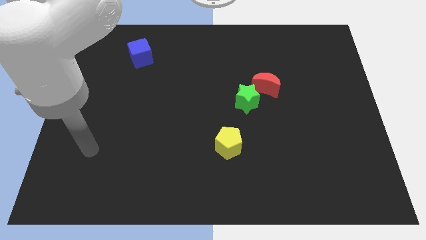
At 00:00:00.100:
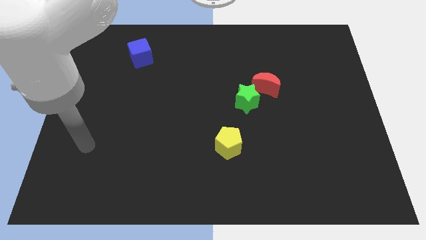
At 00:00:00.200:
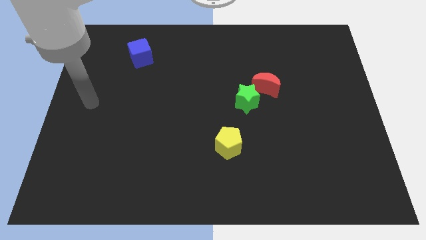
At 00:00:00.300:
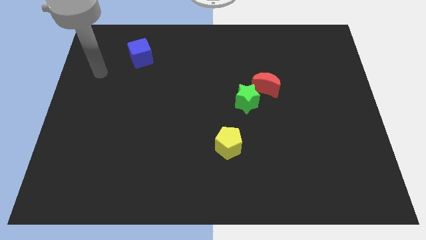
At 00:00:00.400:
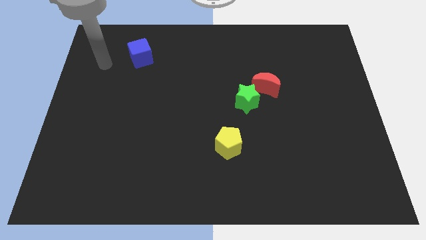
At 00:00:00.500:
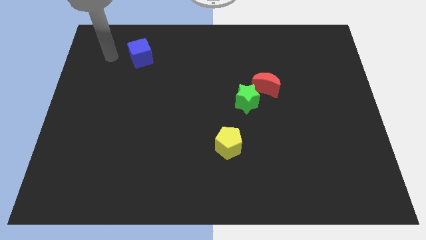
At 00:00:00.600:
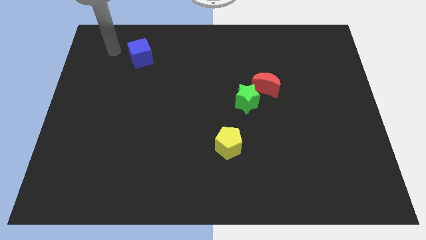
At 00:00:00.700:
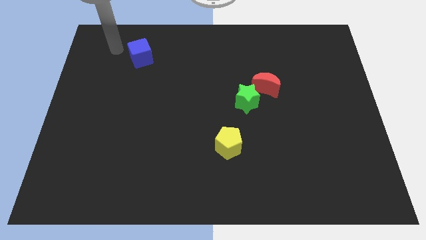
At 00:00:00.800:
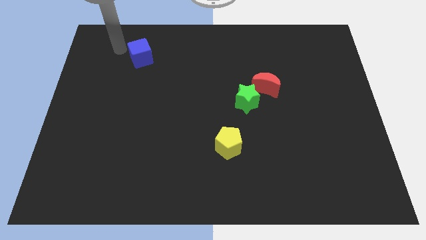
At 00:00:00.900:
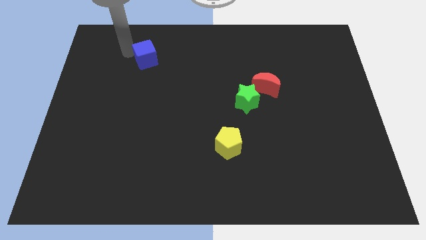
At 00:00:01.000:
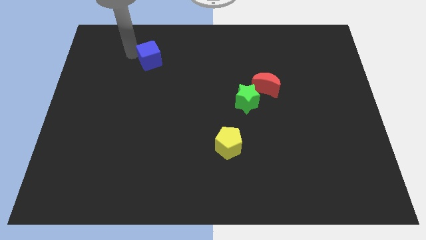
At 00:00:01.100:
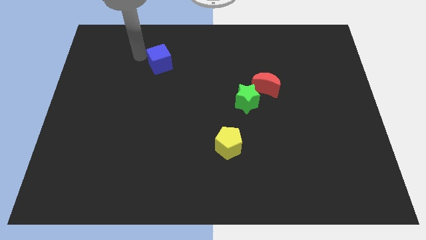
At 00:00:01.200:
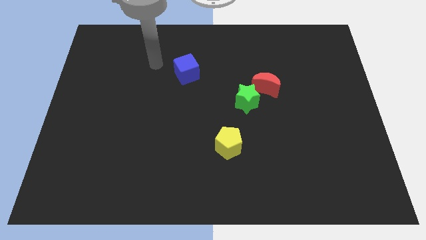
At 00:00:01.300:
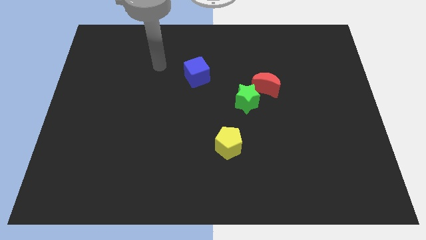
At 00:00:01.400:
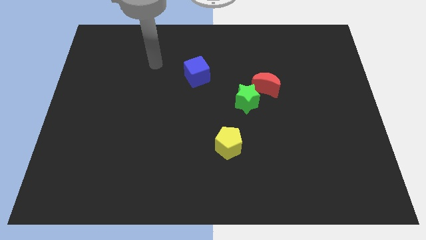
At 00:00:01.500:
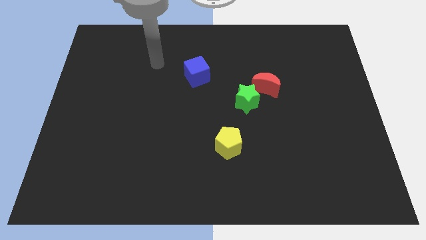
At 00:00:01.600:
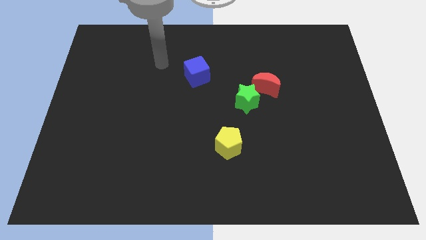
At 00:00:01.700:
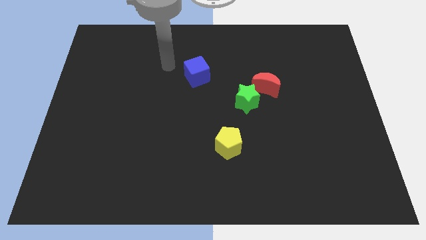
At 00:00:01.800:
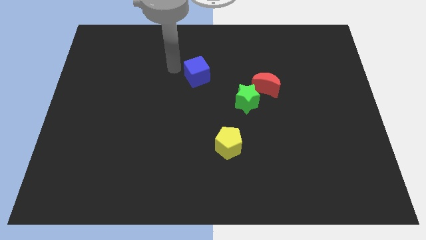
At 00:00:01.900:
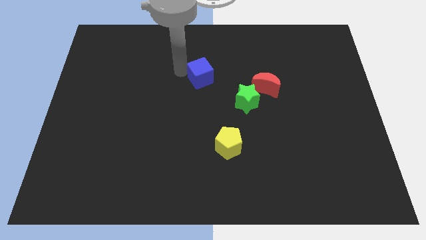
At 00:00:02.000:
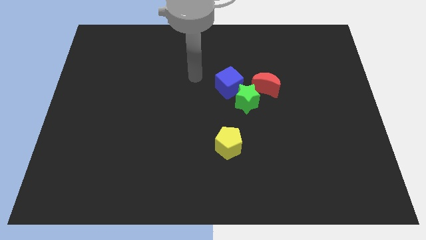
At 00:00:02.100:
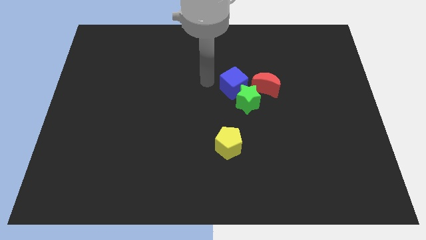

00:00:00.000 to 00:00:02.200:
move the blue cube to the green star

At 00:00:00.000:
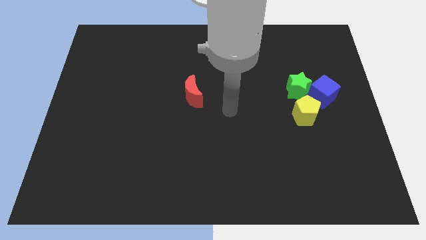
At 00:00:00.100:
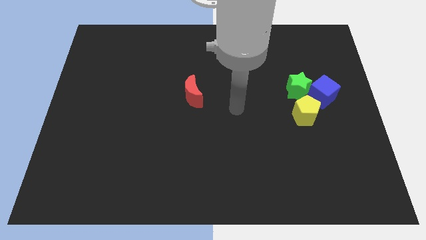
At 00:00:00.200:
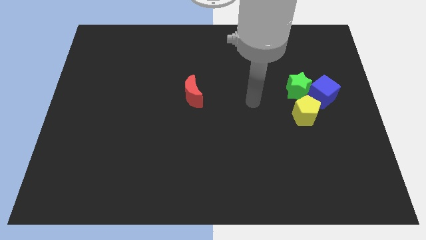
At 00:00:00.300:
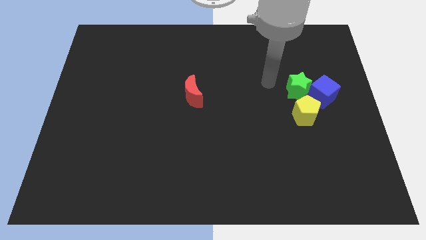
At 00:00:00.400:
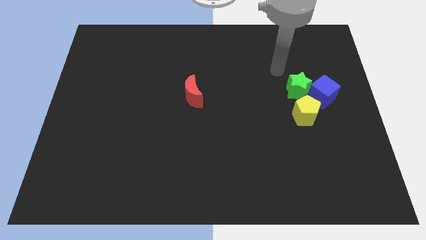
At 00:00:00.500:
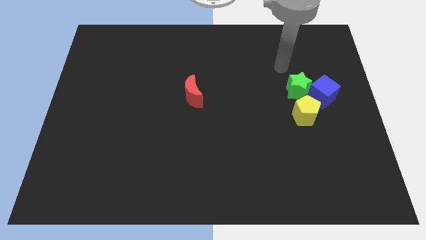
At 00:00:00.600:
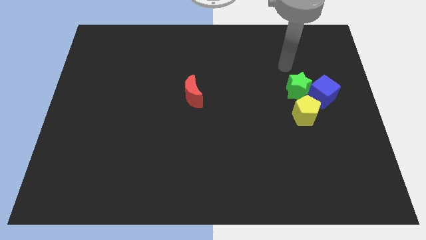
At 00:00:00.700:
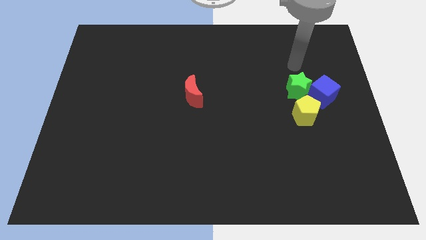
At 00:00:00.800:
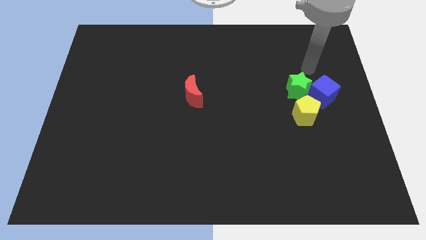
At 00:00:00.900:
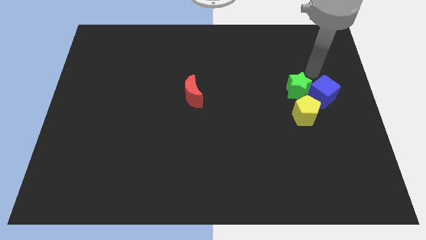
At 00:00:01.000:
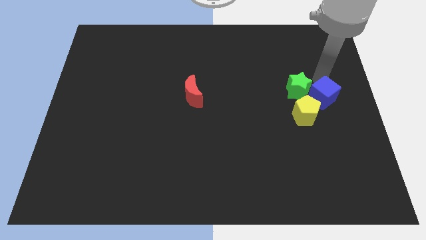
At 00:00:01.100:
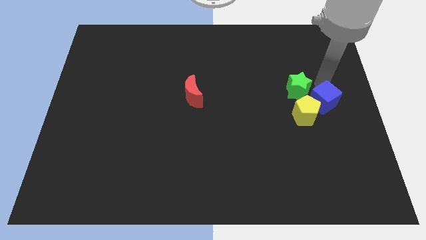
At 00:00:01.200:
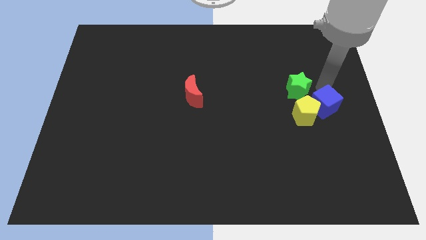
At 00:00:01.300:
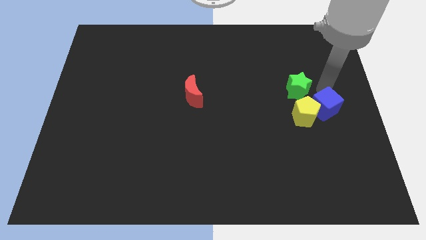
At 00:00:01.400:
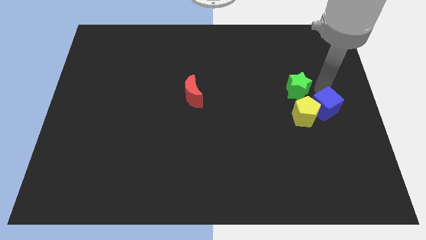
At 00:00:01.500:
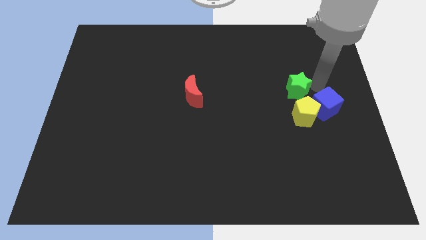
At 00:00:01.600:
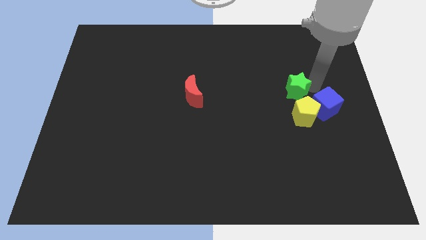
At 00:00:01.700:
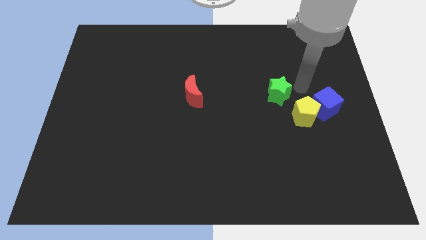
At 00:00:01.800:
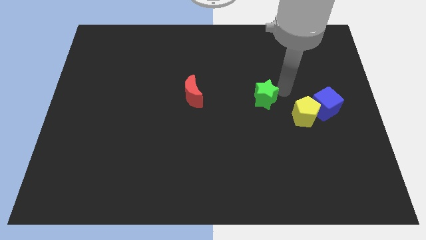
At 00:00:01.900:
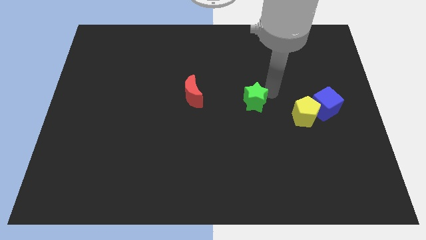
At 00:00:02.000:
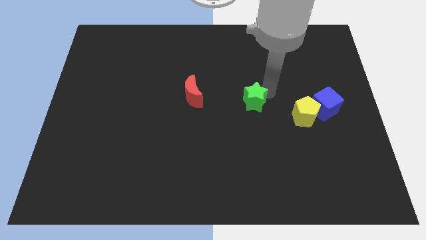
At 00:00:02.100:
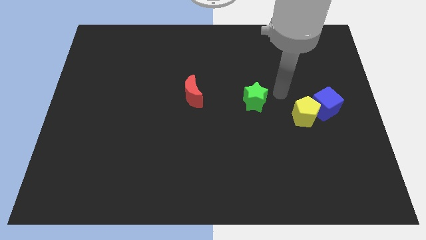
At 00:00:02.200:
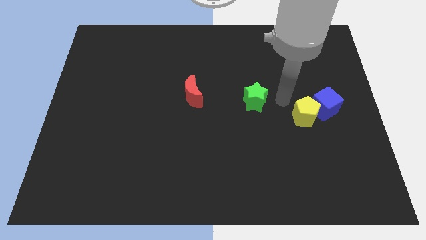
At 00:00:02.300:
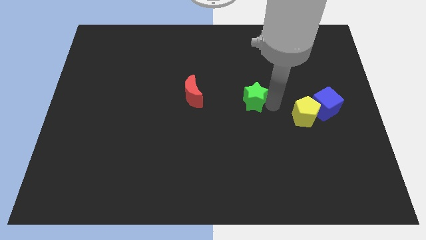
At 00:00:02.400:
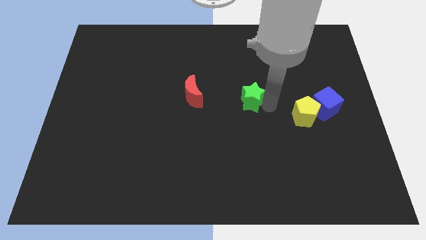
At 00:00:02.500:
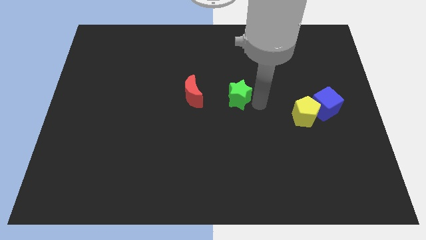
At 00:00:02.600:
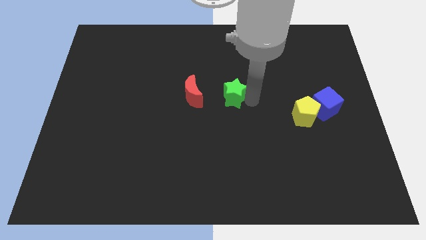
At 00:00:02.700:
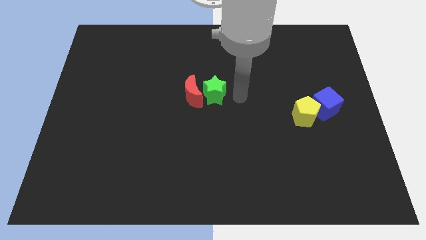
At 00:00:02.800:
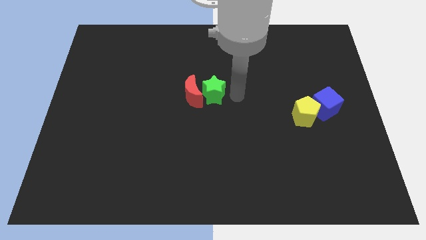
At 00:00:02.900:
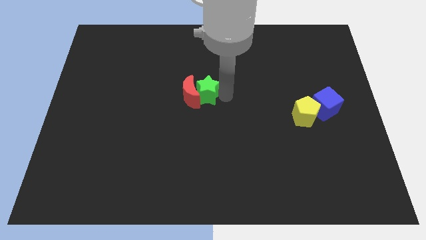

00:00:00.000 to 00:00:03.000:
slide the green block towards the red block

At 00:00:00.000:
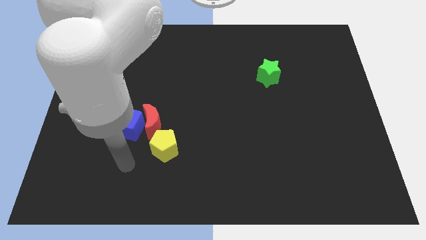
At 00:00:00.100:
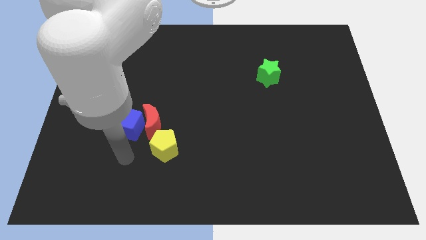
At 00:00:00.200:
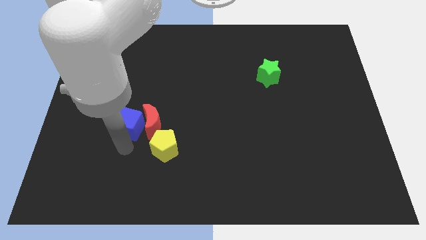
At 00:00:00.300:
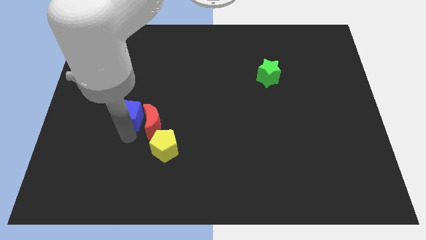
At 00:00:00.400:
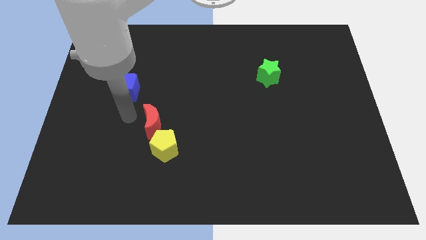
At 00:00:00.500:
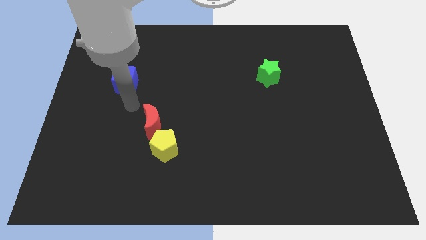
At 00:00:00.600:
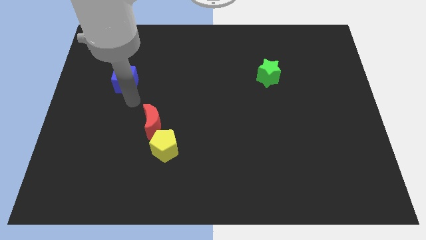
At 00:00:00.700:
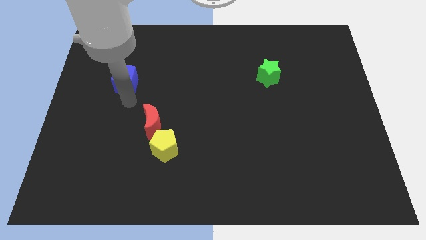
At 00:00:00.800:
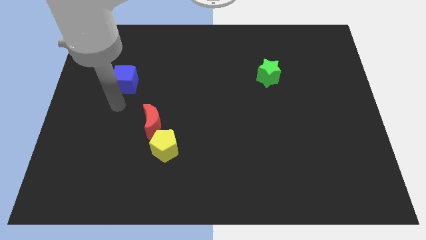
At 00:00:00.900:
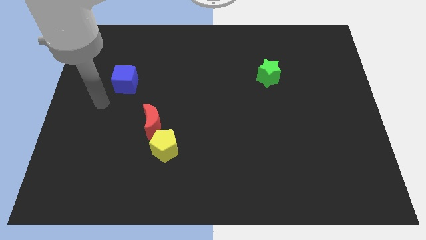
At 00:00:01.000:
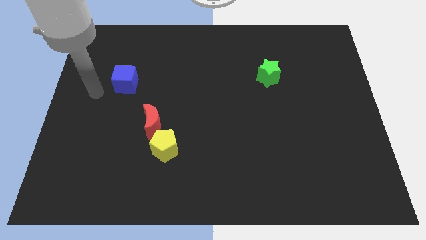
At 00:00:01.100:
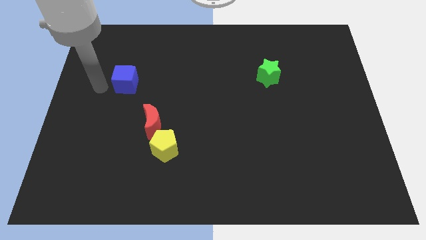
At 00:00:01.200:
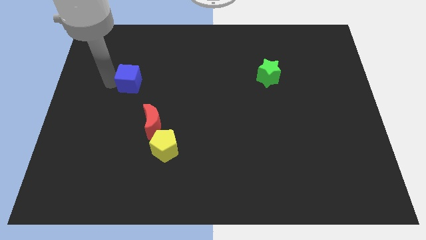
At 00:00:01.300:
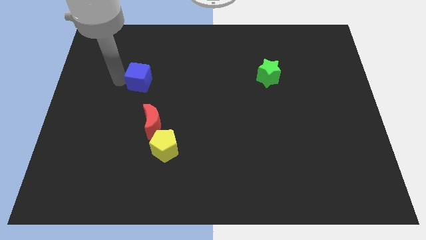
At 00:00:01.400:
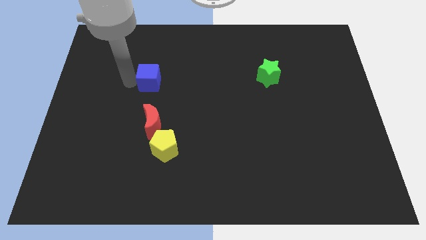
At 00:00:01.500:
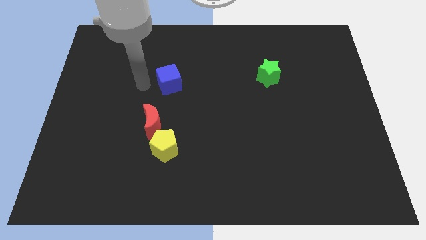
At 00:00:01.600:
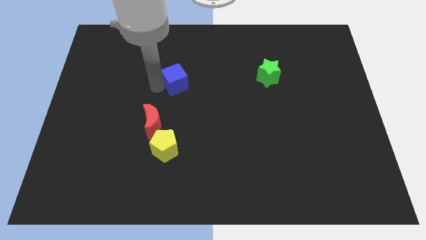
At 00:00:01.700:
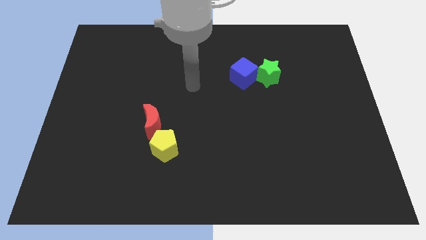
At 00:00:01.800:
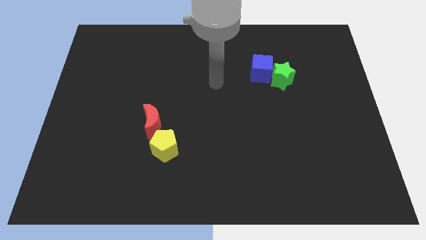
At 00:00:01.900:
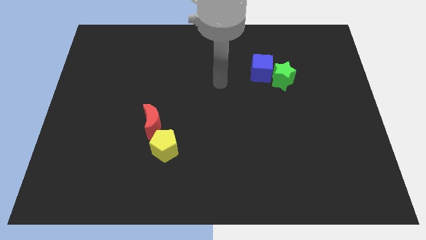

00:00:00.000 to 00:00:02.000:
move the cube to the green star

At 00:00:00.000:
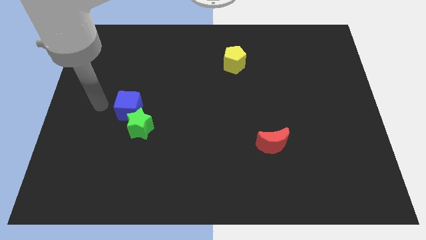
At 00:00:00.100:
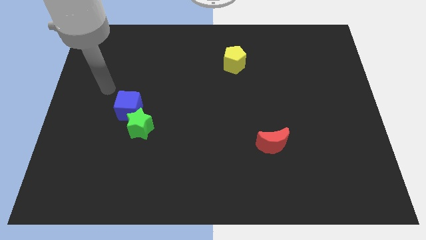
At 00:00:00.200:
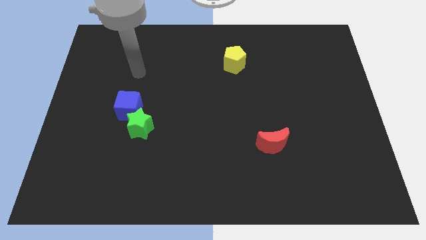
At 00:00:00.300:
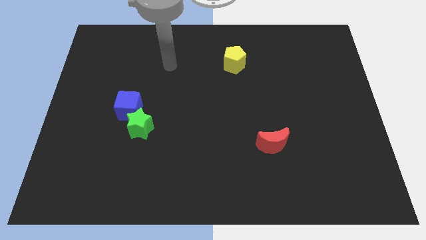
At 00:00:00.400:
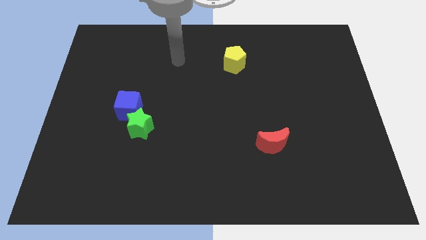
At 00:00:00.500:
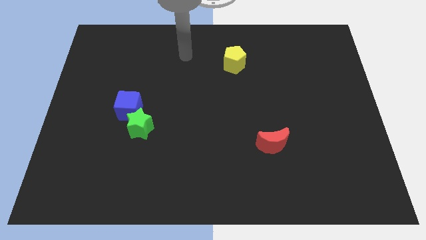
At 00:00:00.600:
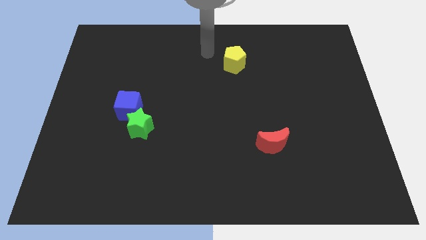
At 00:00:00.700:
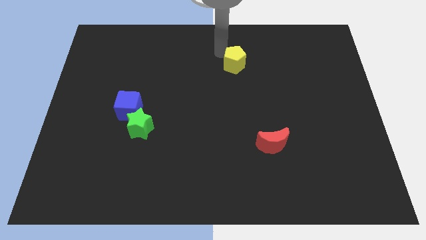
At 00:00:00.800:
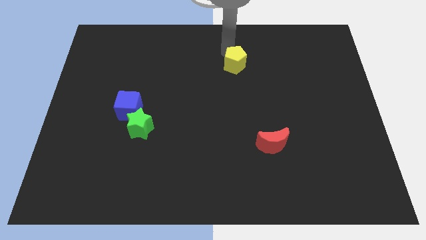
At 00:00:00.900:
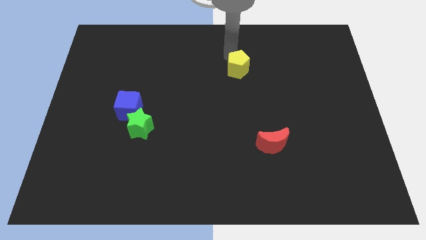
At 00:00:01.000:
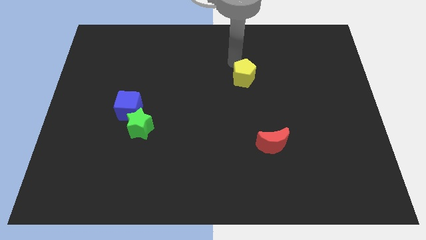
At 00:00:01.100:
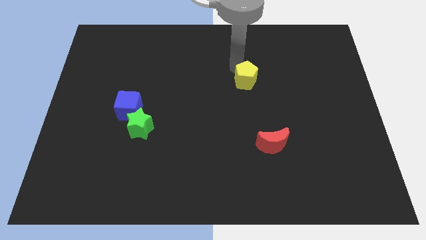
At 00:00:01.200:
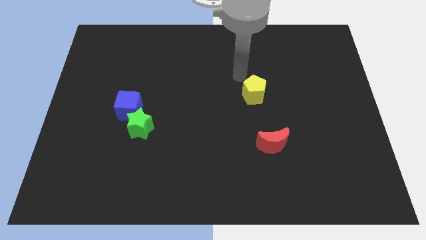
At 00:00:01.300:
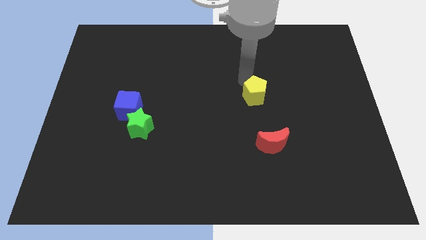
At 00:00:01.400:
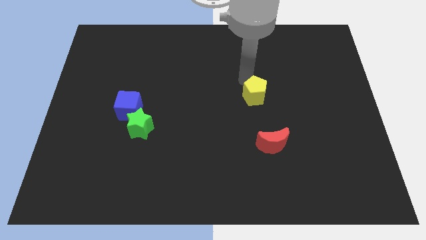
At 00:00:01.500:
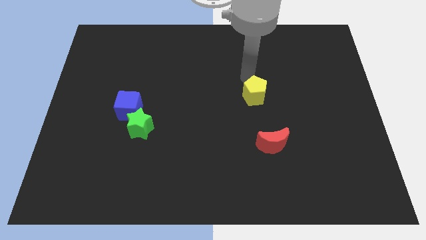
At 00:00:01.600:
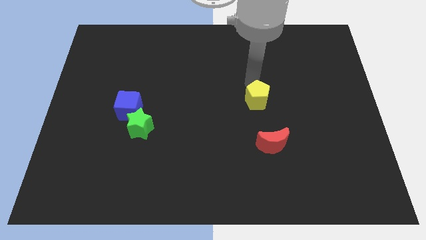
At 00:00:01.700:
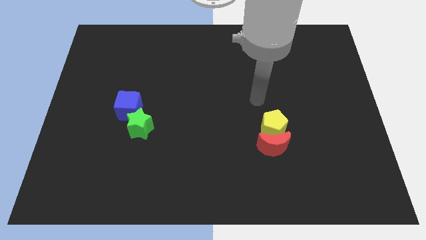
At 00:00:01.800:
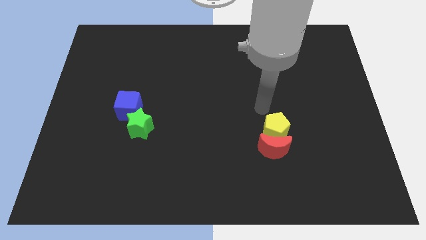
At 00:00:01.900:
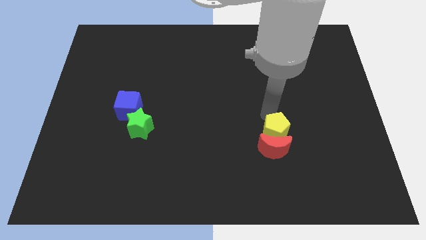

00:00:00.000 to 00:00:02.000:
push the pentagon to the moon
